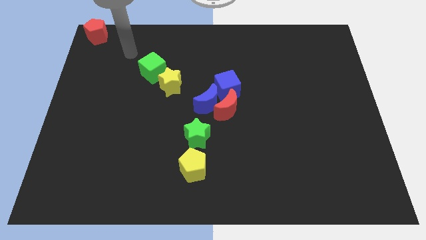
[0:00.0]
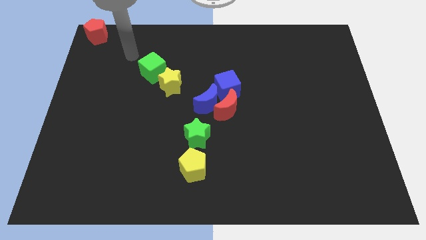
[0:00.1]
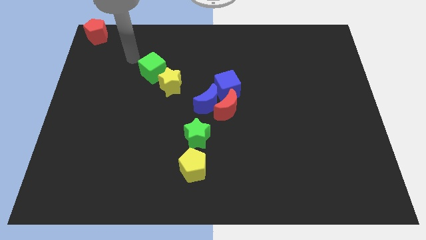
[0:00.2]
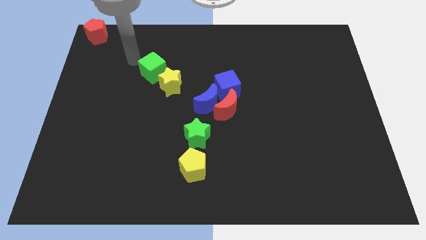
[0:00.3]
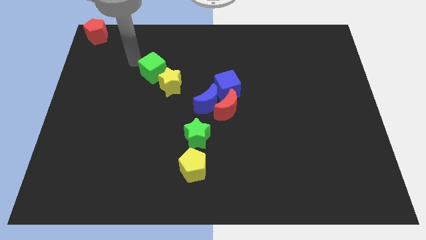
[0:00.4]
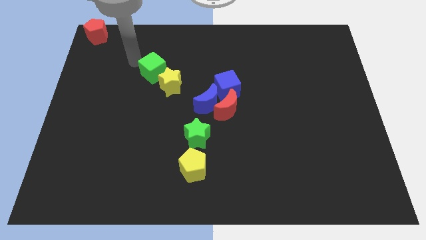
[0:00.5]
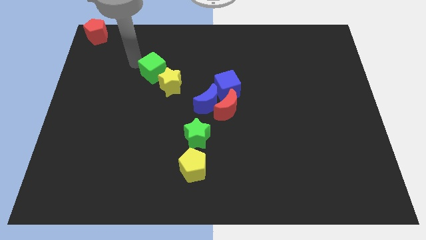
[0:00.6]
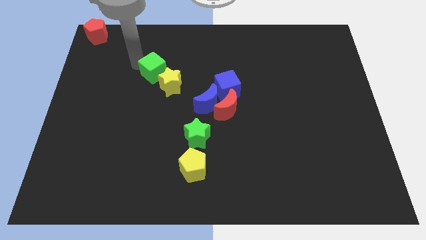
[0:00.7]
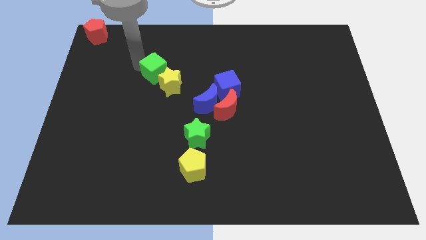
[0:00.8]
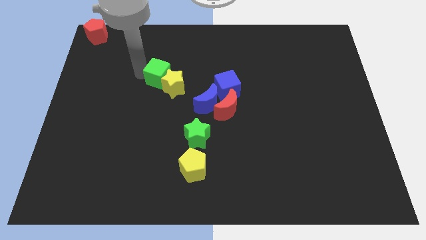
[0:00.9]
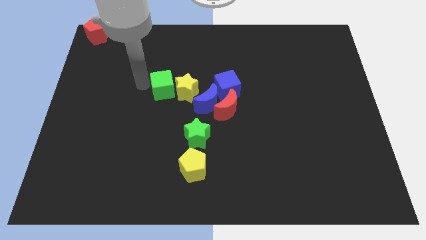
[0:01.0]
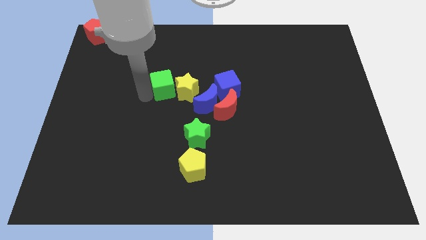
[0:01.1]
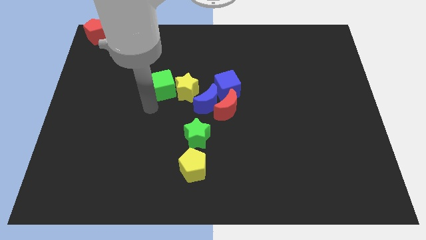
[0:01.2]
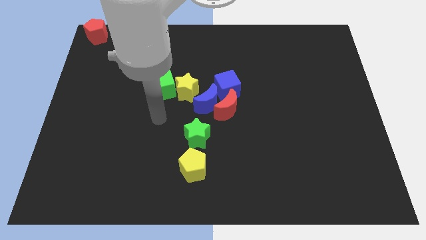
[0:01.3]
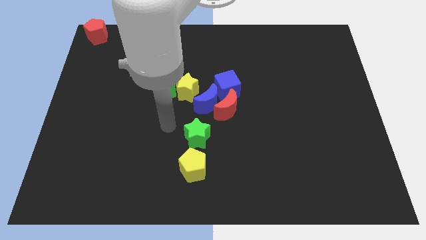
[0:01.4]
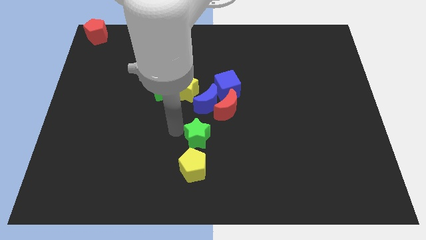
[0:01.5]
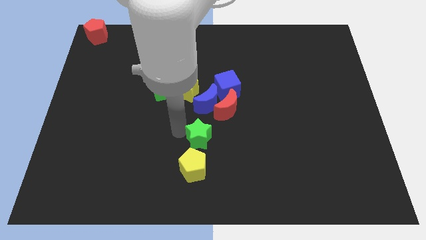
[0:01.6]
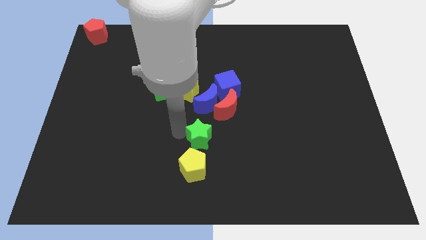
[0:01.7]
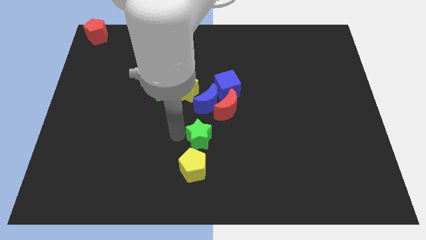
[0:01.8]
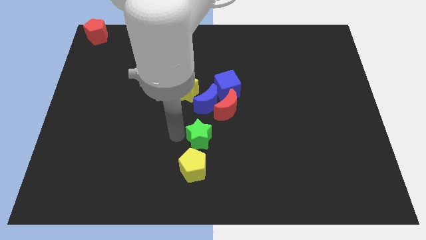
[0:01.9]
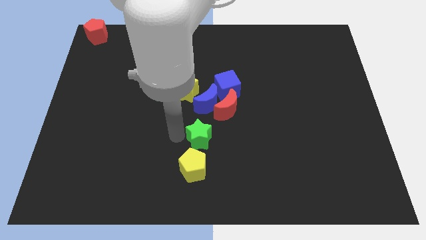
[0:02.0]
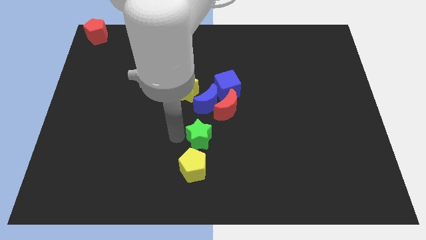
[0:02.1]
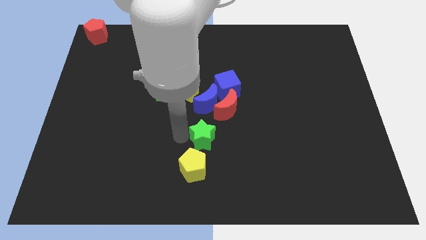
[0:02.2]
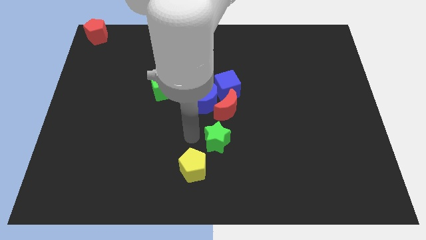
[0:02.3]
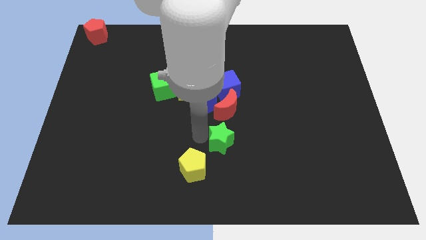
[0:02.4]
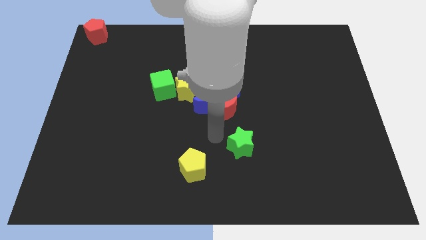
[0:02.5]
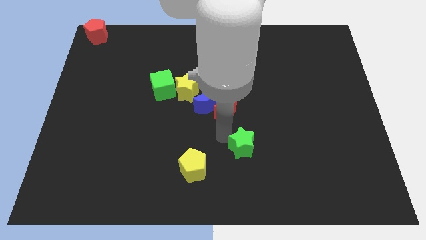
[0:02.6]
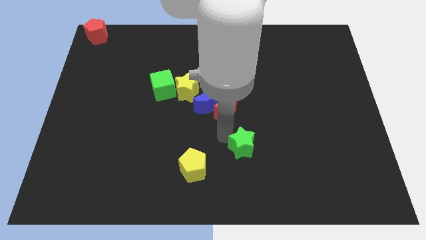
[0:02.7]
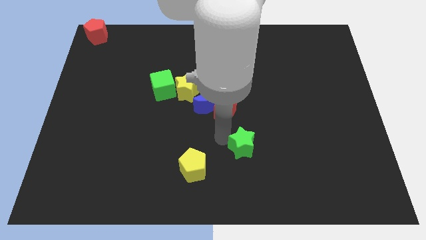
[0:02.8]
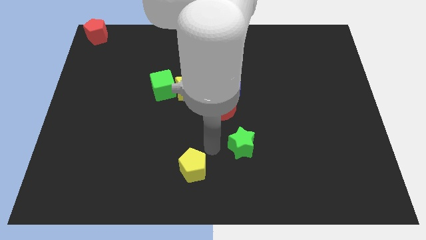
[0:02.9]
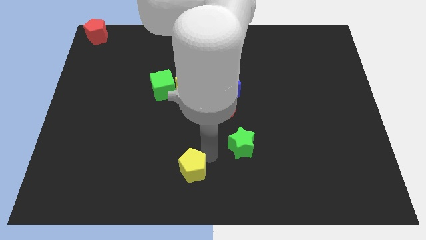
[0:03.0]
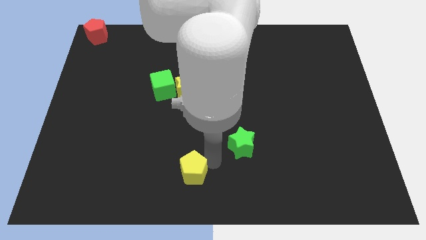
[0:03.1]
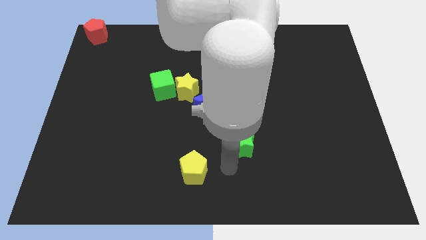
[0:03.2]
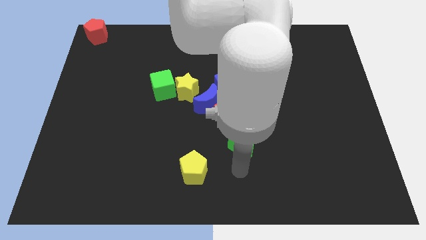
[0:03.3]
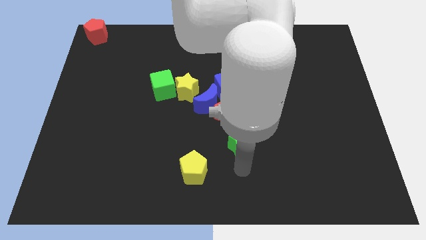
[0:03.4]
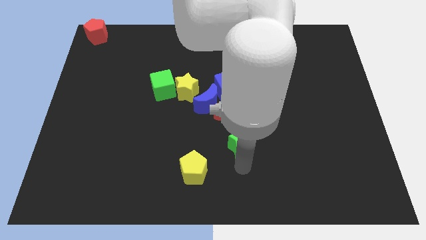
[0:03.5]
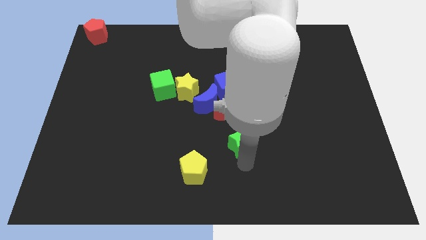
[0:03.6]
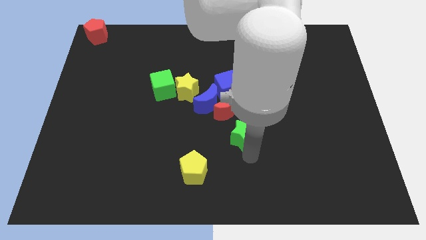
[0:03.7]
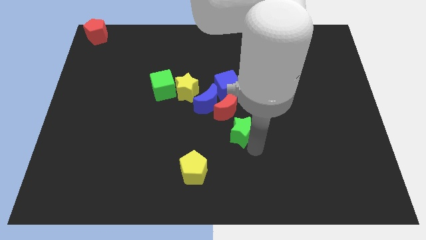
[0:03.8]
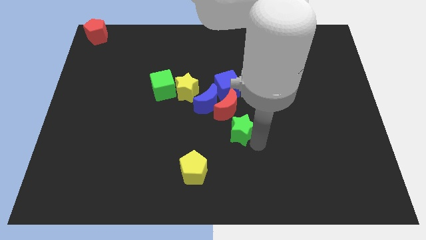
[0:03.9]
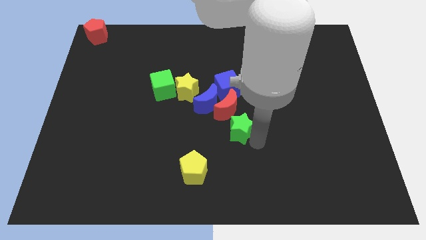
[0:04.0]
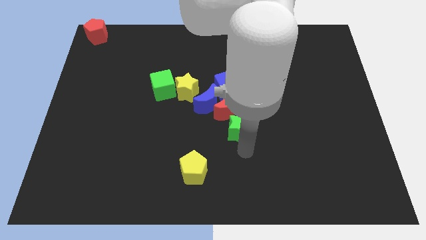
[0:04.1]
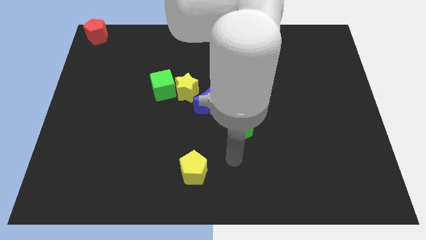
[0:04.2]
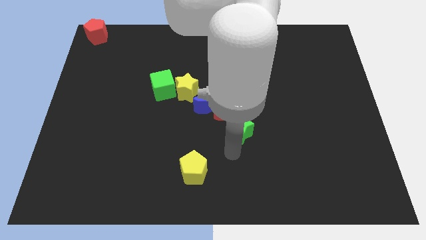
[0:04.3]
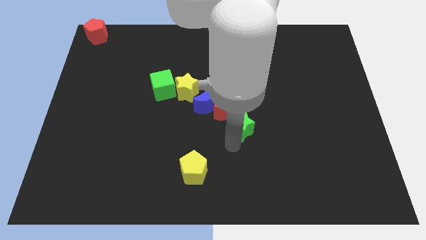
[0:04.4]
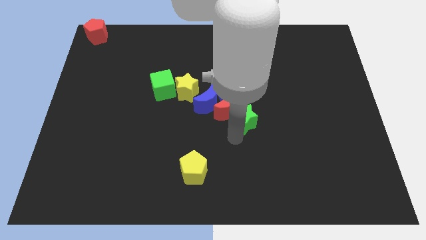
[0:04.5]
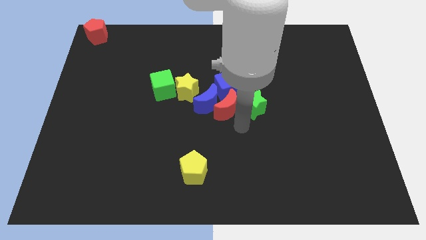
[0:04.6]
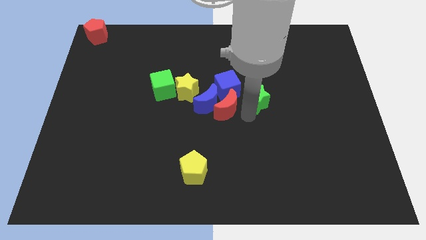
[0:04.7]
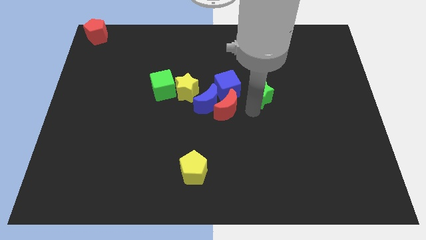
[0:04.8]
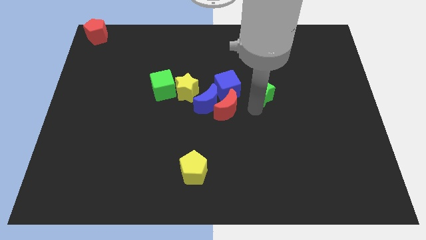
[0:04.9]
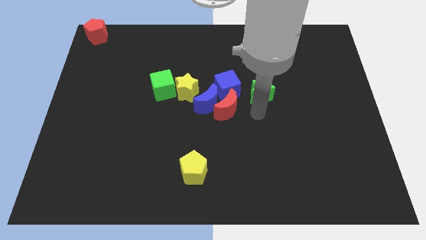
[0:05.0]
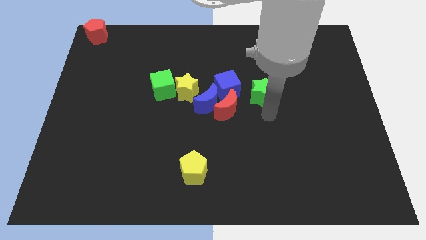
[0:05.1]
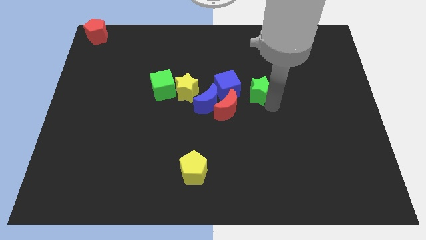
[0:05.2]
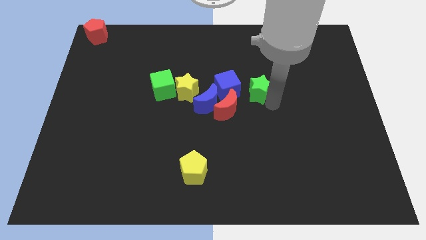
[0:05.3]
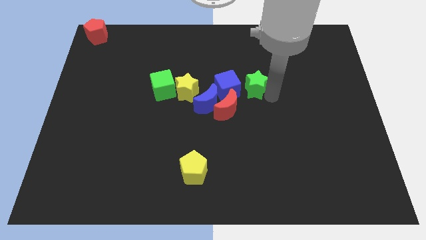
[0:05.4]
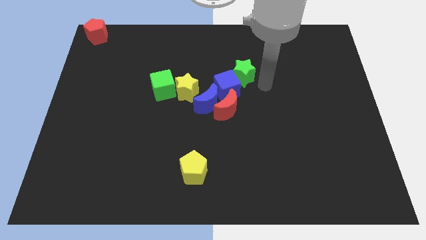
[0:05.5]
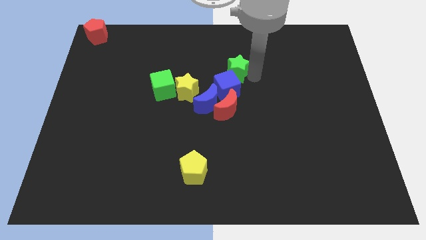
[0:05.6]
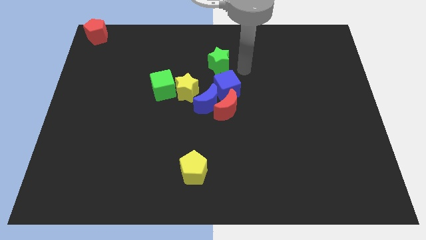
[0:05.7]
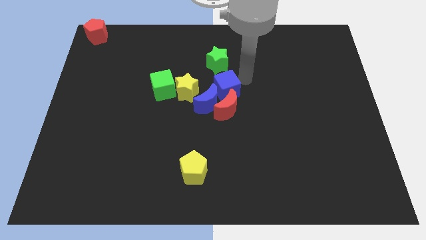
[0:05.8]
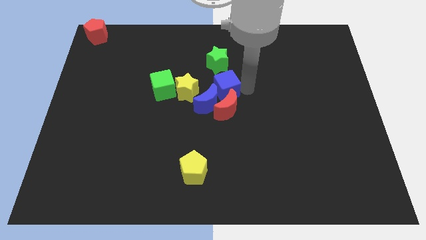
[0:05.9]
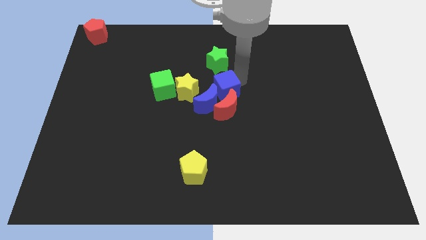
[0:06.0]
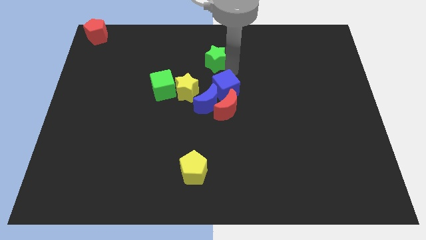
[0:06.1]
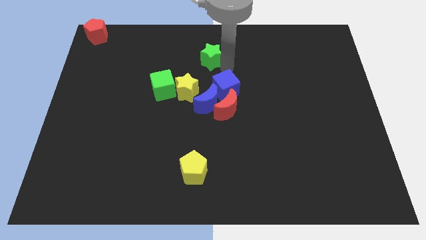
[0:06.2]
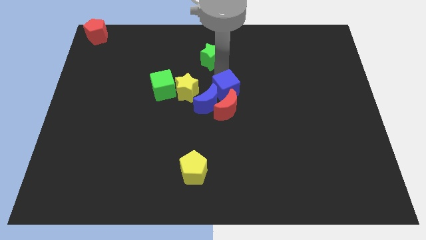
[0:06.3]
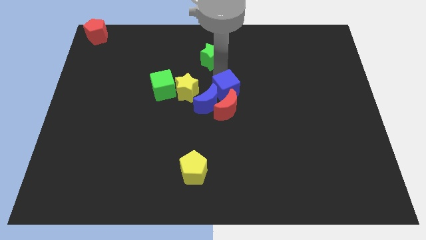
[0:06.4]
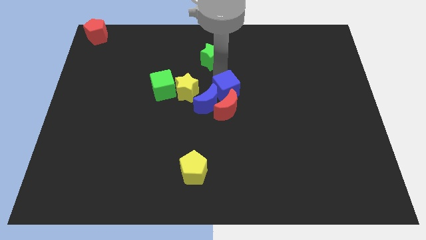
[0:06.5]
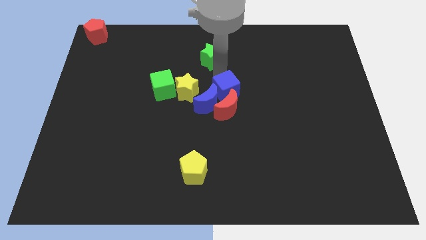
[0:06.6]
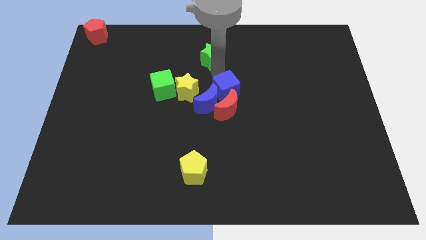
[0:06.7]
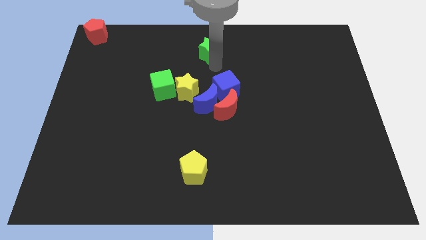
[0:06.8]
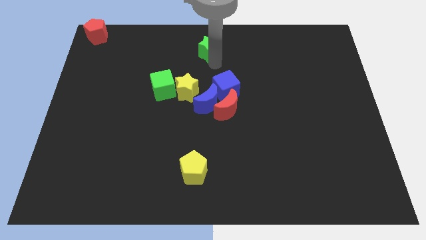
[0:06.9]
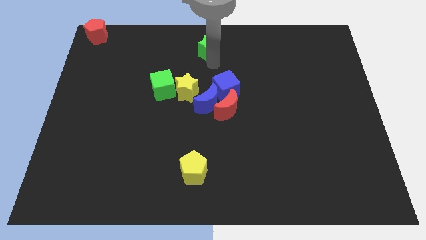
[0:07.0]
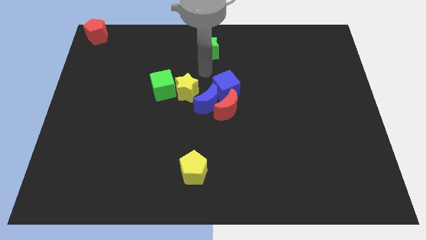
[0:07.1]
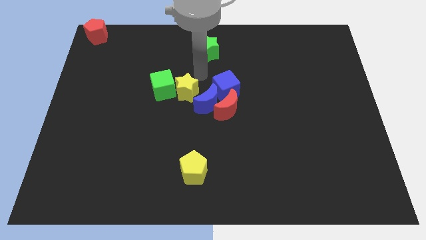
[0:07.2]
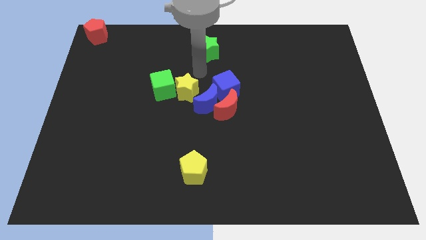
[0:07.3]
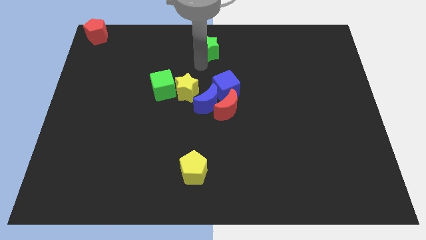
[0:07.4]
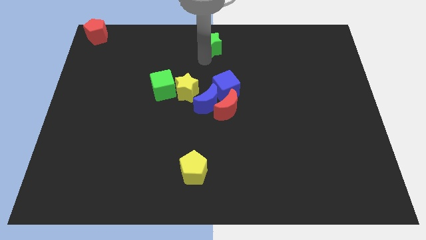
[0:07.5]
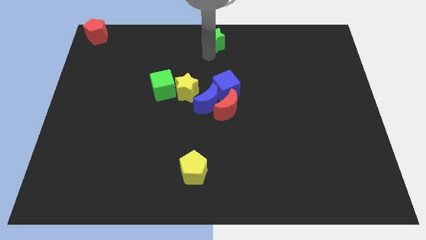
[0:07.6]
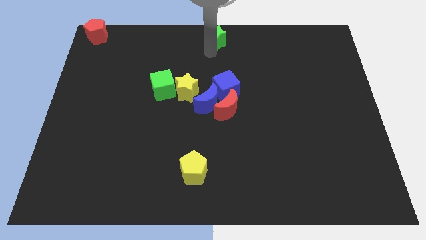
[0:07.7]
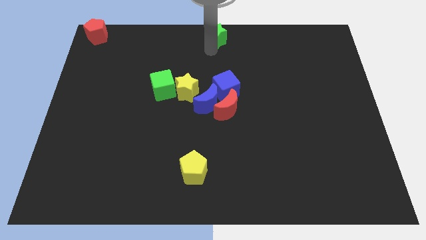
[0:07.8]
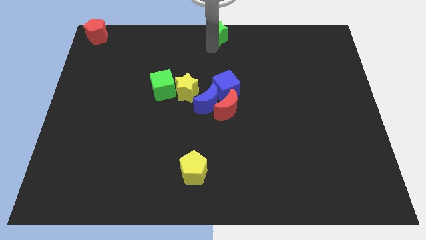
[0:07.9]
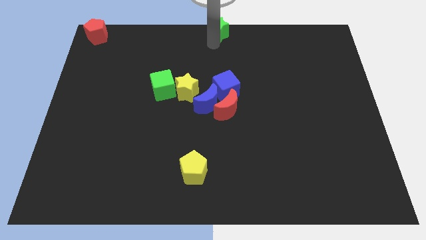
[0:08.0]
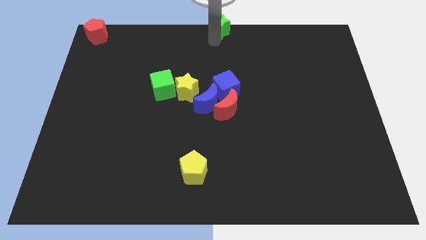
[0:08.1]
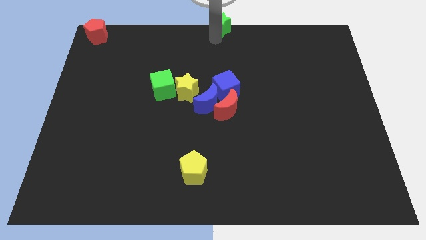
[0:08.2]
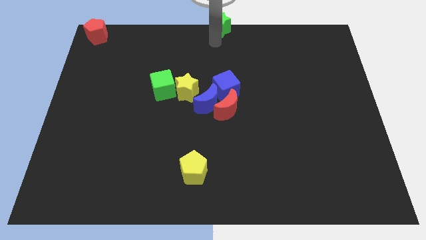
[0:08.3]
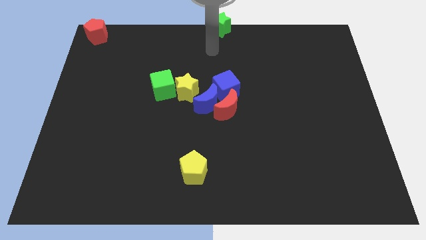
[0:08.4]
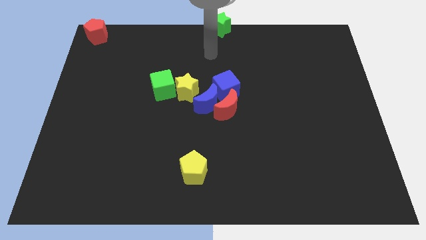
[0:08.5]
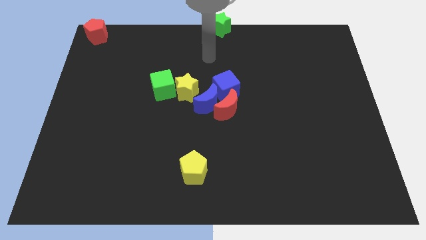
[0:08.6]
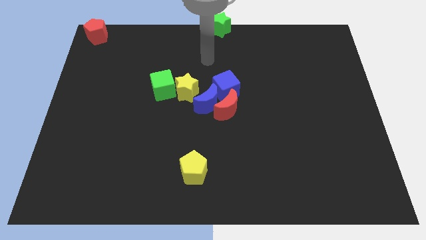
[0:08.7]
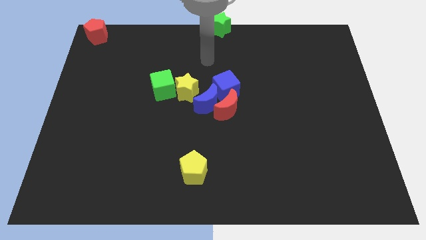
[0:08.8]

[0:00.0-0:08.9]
place the green star towards the top center of the board
